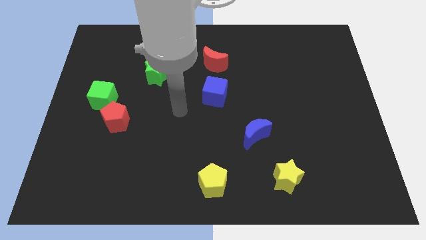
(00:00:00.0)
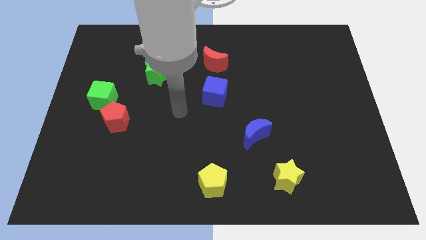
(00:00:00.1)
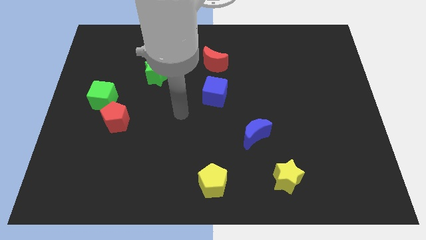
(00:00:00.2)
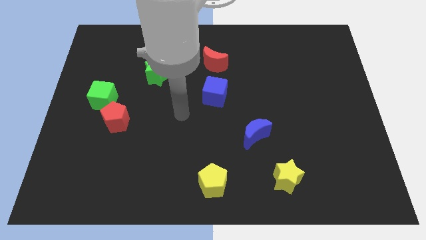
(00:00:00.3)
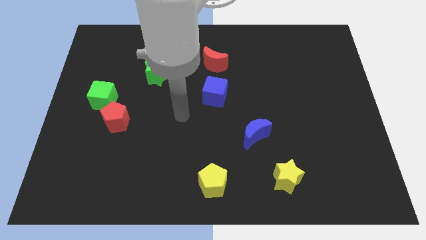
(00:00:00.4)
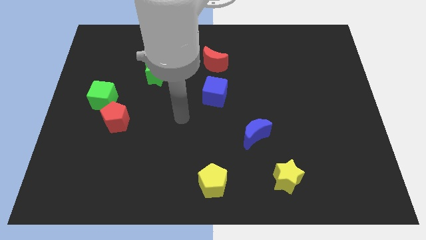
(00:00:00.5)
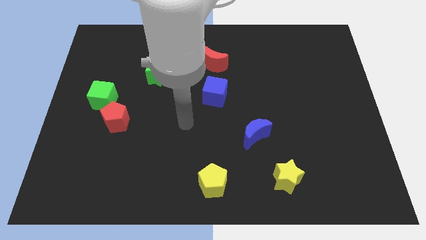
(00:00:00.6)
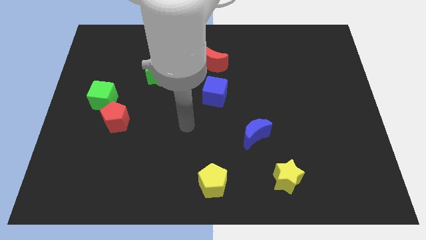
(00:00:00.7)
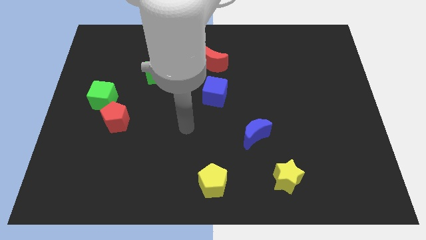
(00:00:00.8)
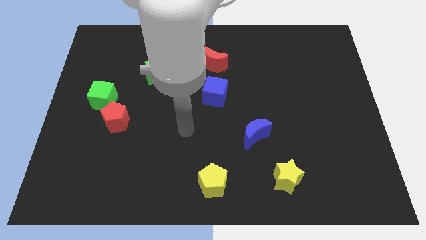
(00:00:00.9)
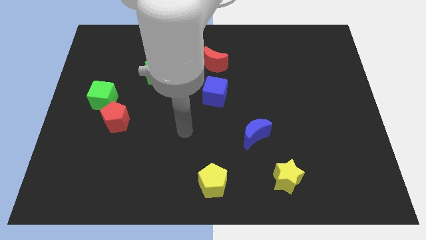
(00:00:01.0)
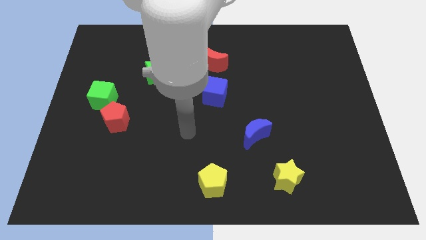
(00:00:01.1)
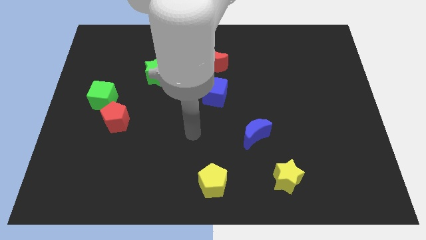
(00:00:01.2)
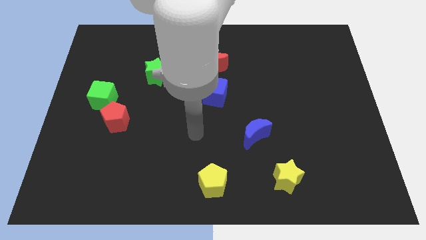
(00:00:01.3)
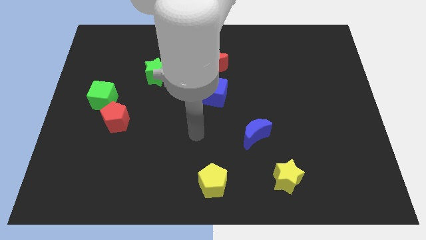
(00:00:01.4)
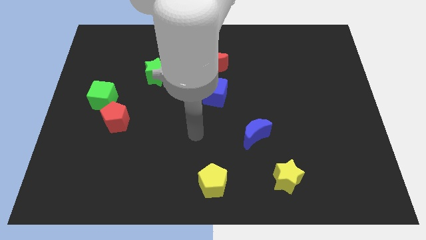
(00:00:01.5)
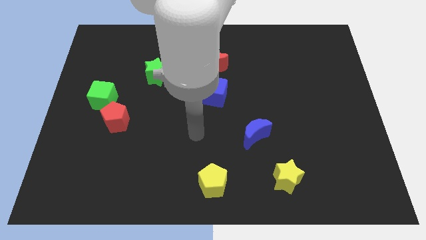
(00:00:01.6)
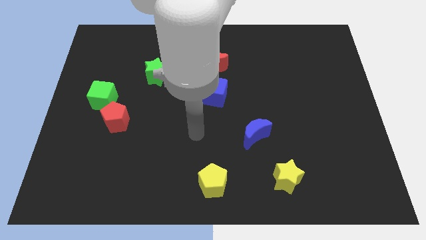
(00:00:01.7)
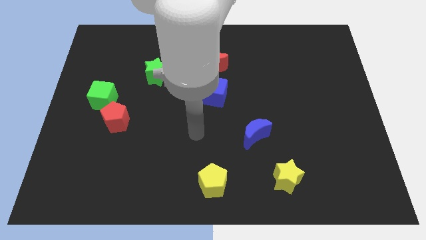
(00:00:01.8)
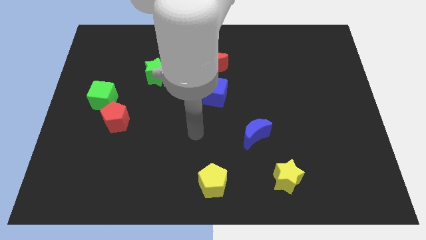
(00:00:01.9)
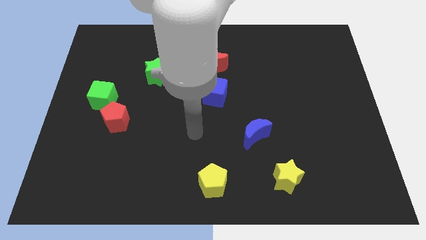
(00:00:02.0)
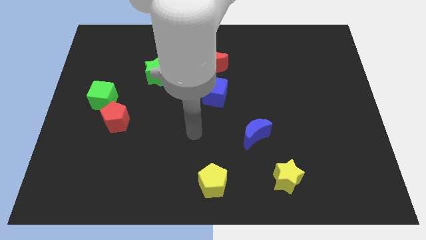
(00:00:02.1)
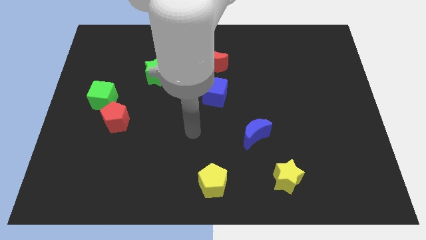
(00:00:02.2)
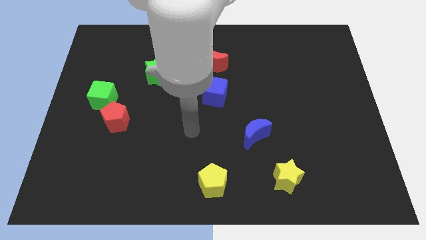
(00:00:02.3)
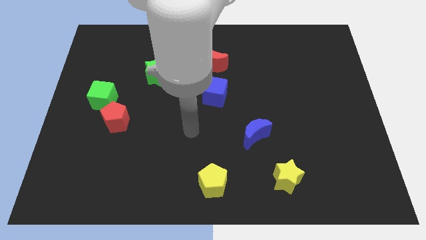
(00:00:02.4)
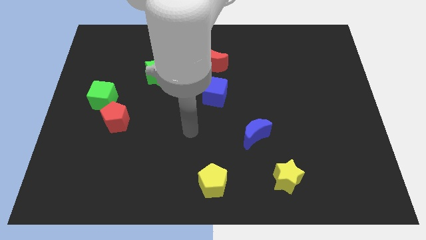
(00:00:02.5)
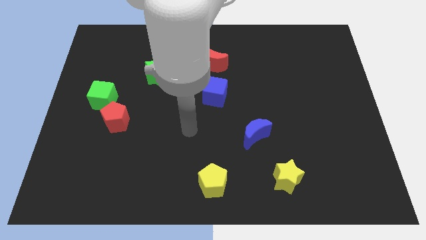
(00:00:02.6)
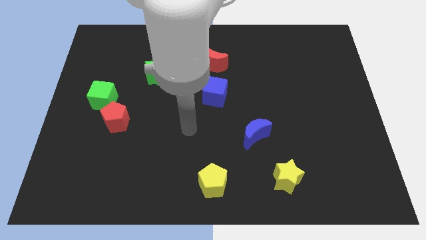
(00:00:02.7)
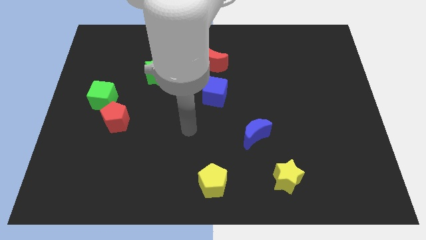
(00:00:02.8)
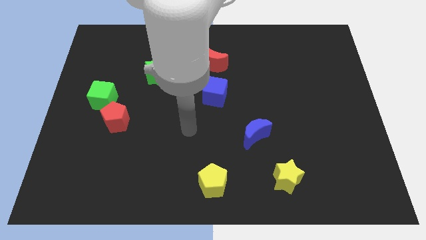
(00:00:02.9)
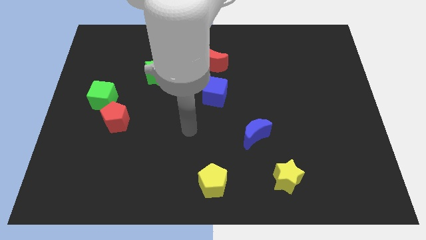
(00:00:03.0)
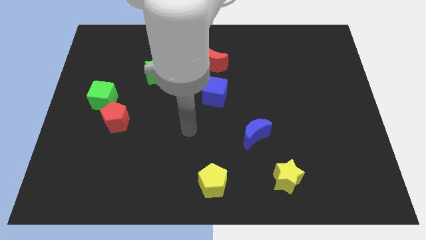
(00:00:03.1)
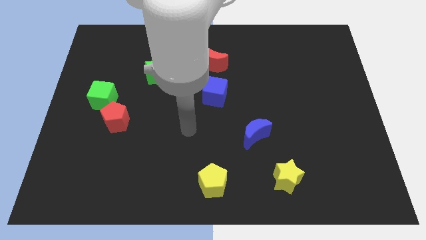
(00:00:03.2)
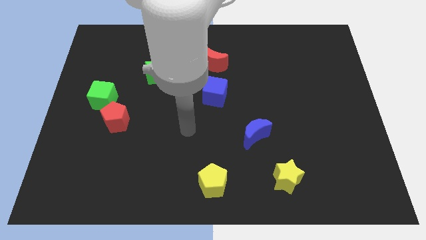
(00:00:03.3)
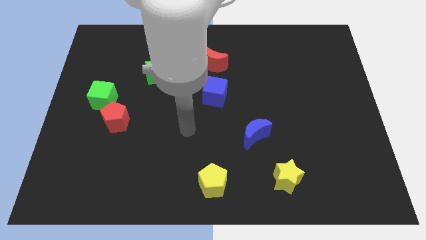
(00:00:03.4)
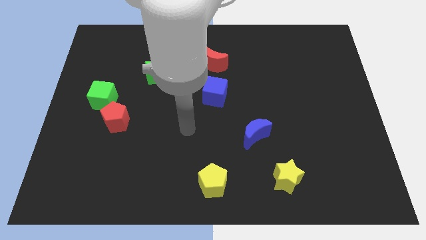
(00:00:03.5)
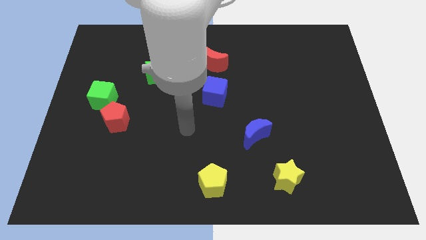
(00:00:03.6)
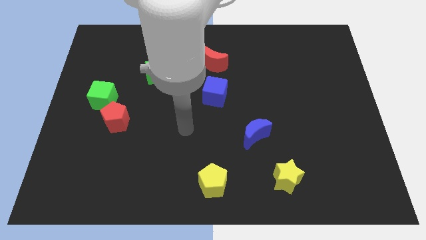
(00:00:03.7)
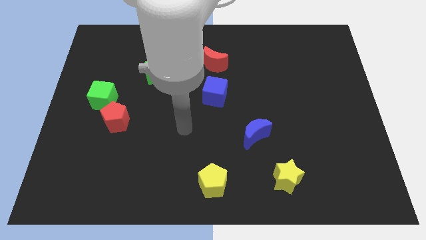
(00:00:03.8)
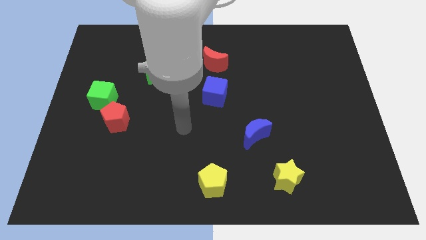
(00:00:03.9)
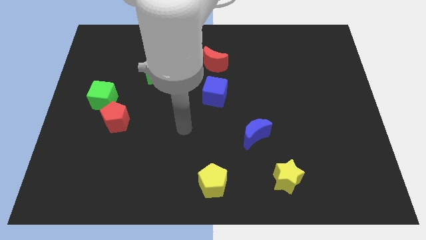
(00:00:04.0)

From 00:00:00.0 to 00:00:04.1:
move the arm slightly towards the yellow pentagon

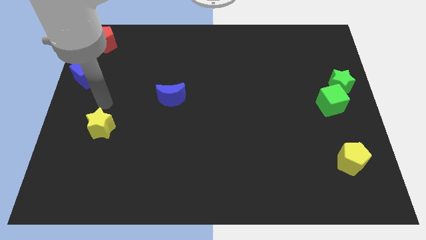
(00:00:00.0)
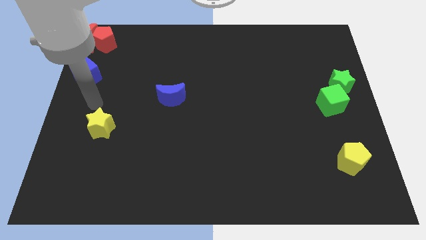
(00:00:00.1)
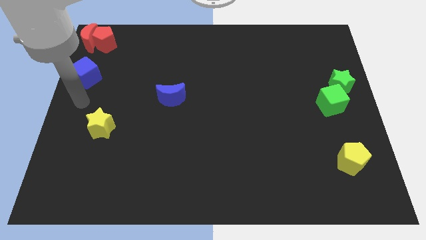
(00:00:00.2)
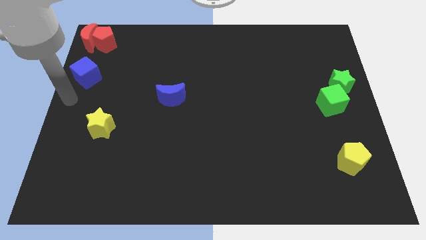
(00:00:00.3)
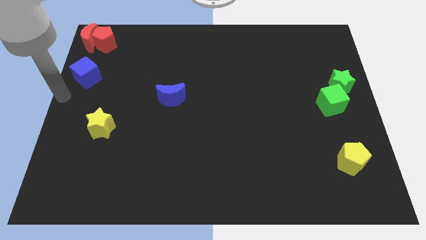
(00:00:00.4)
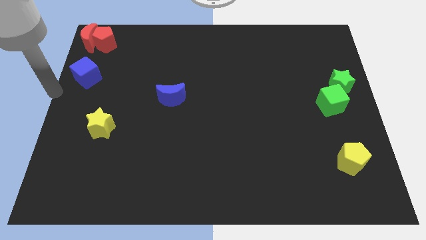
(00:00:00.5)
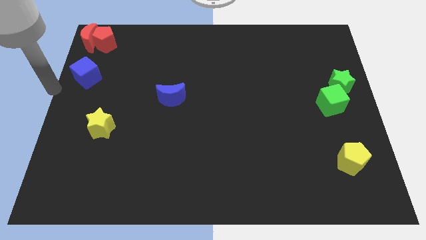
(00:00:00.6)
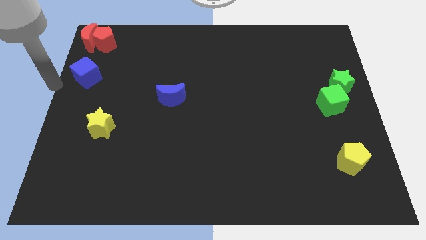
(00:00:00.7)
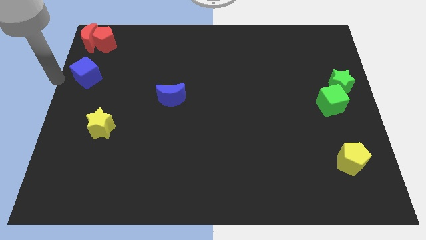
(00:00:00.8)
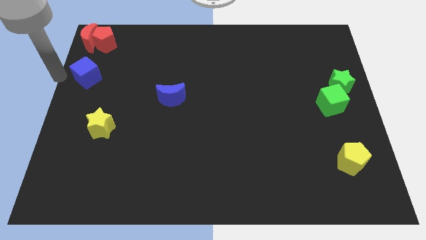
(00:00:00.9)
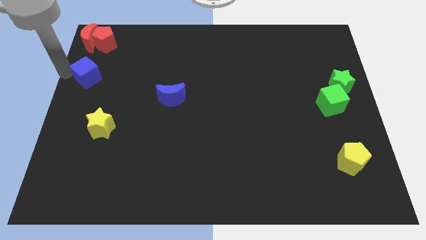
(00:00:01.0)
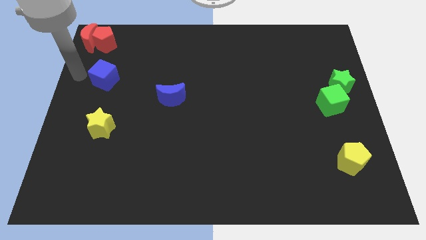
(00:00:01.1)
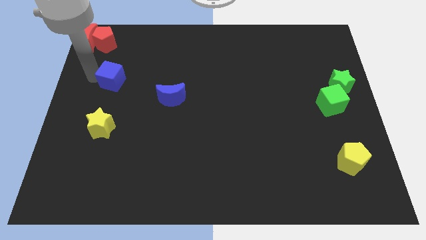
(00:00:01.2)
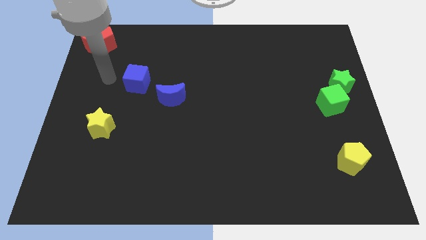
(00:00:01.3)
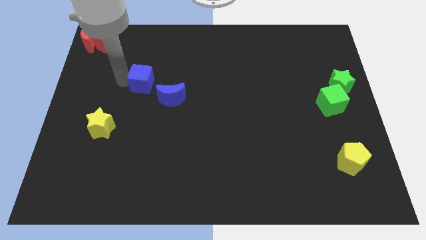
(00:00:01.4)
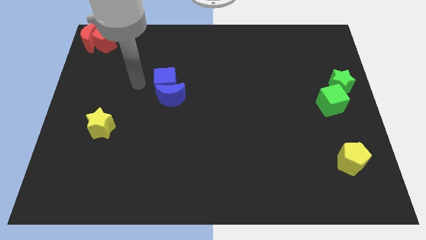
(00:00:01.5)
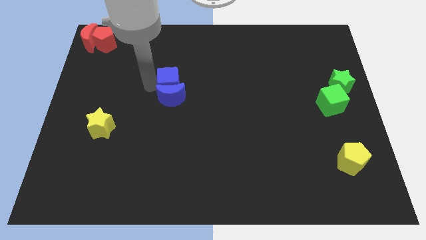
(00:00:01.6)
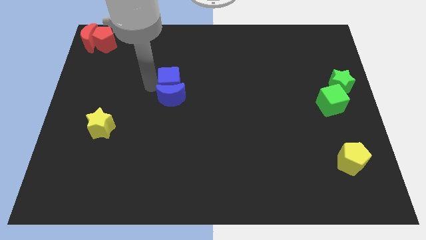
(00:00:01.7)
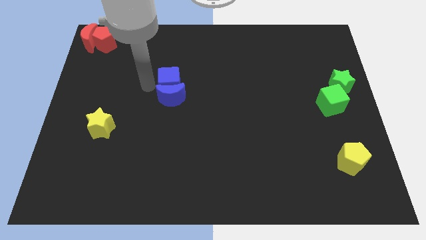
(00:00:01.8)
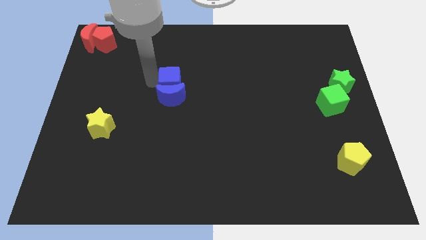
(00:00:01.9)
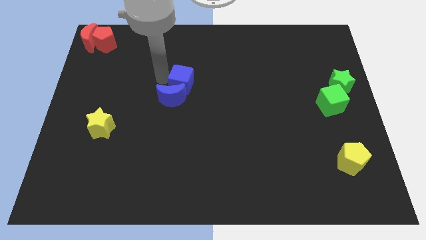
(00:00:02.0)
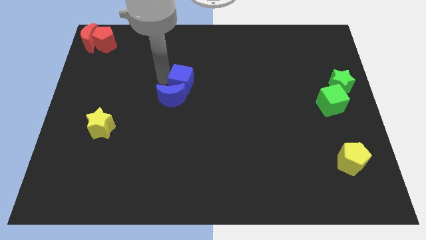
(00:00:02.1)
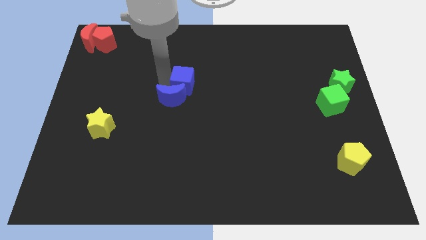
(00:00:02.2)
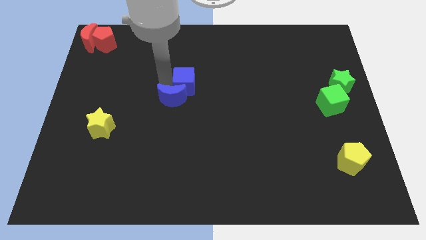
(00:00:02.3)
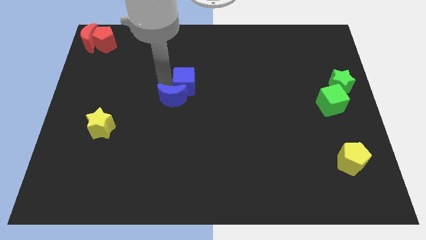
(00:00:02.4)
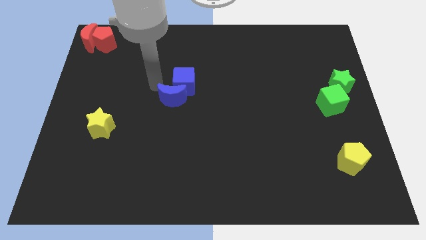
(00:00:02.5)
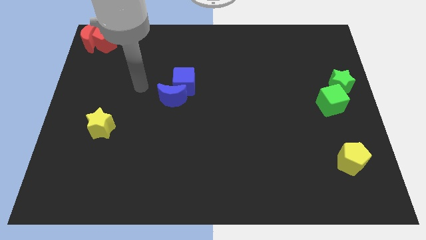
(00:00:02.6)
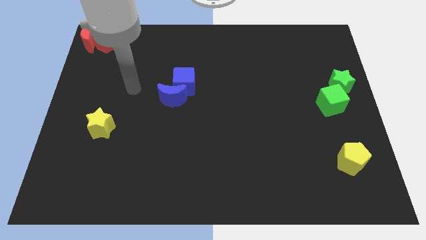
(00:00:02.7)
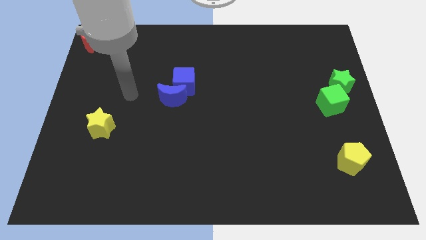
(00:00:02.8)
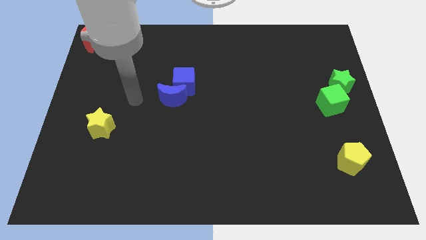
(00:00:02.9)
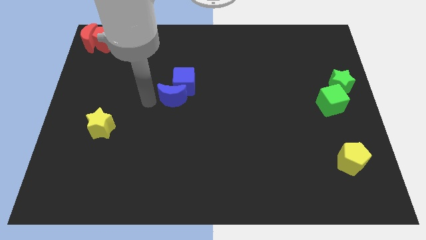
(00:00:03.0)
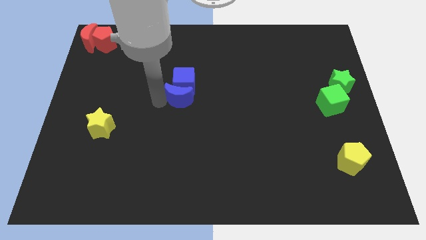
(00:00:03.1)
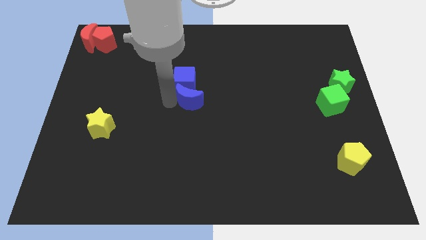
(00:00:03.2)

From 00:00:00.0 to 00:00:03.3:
put the blue cube vertically on the top right side of the blue moon

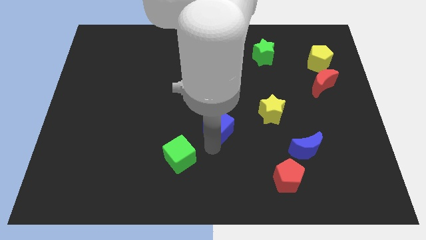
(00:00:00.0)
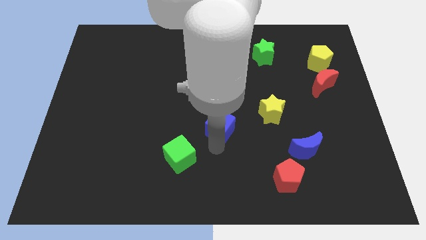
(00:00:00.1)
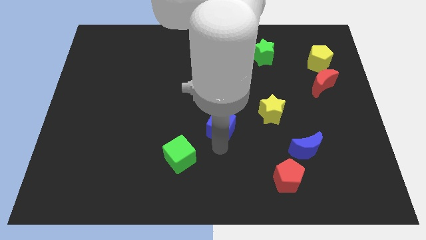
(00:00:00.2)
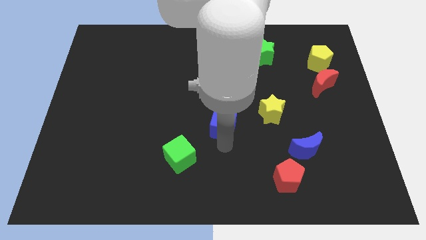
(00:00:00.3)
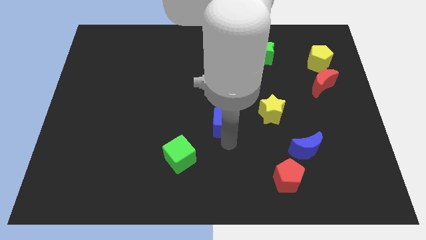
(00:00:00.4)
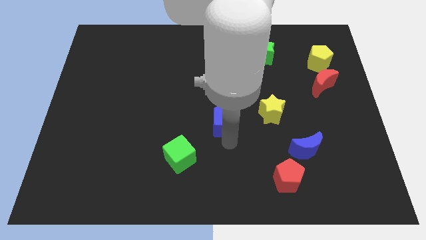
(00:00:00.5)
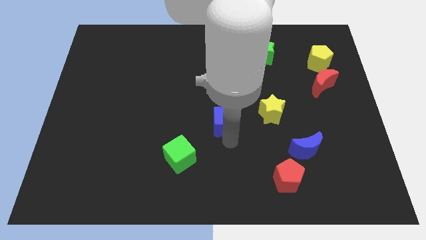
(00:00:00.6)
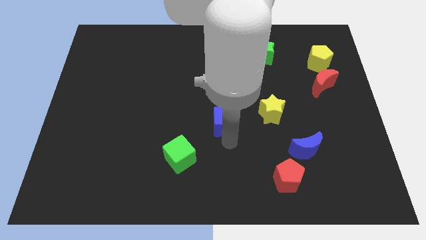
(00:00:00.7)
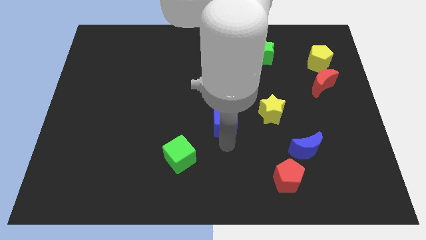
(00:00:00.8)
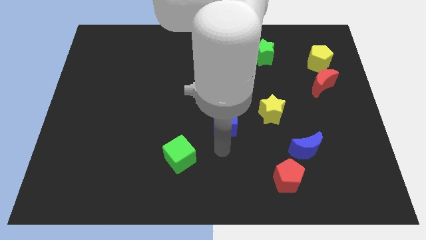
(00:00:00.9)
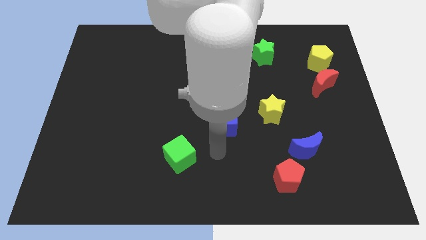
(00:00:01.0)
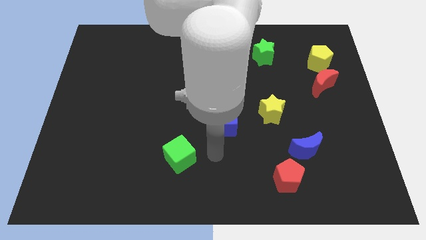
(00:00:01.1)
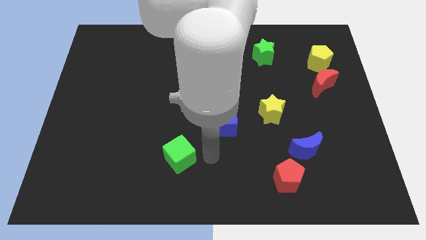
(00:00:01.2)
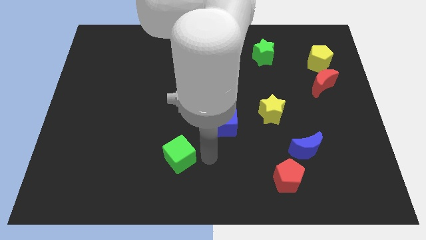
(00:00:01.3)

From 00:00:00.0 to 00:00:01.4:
move the blue cube upwards
